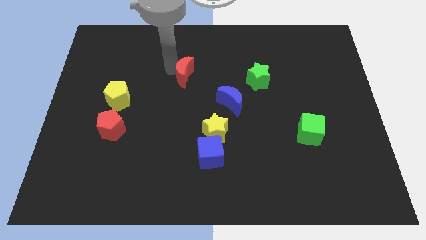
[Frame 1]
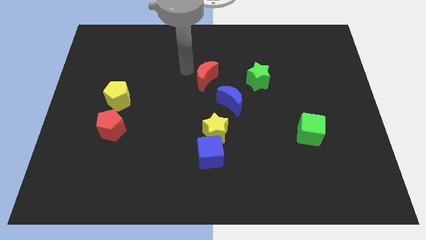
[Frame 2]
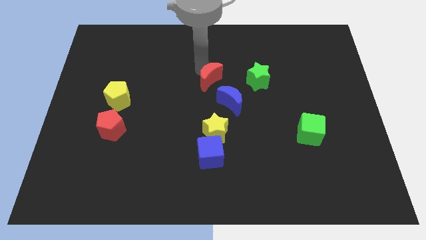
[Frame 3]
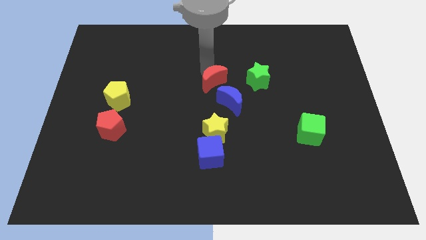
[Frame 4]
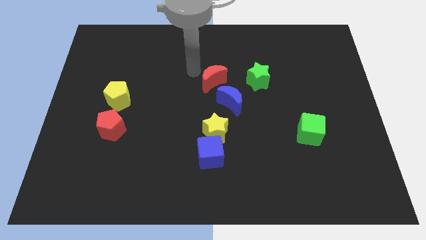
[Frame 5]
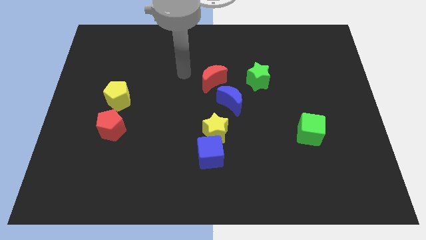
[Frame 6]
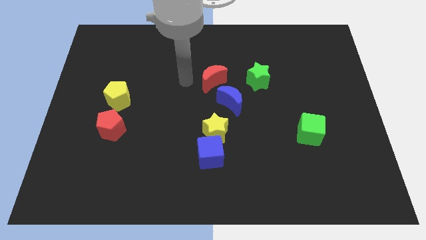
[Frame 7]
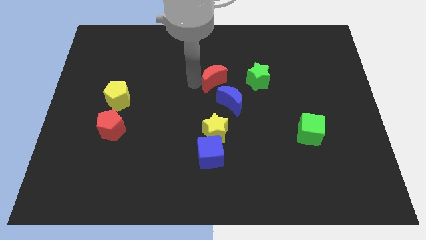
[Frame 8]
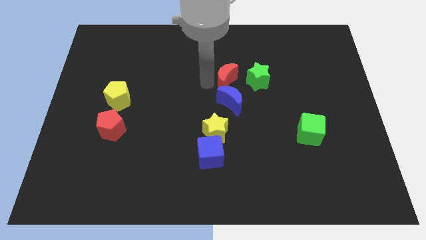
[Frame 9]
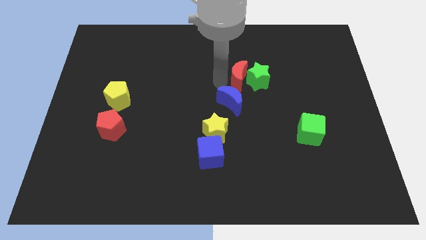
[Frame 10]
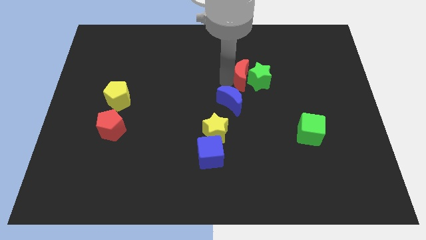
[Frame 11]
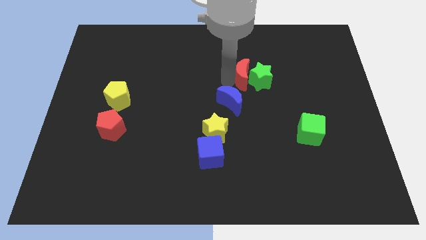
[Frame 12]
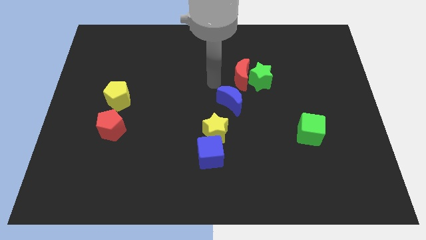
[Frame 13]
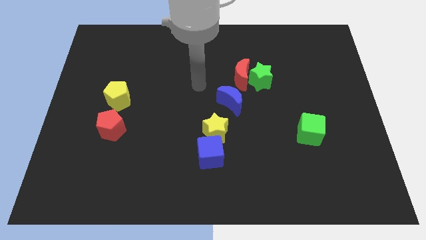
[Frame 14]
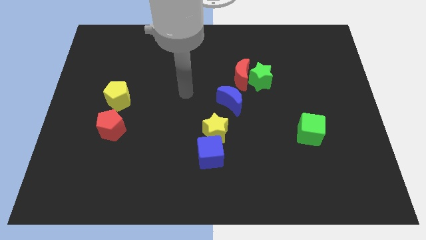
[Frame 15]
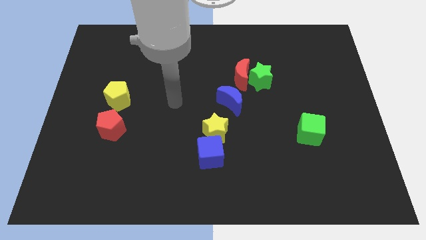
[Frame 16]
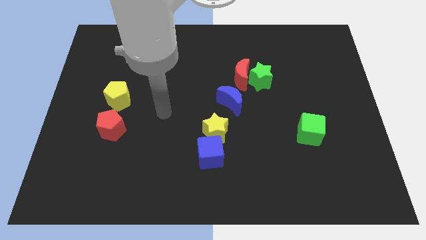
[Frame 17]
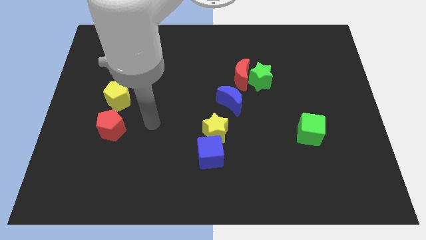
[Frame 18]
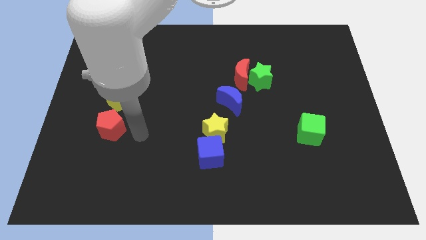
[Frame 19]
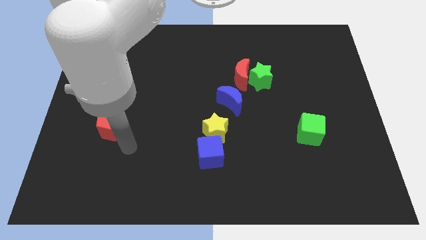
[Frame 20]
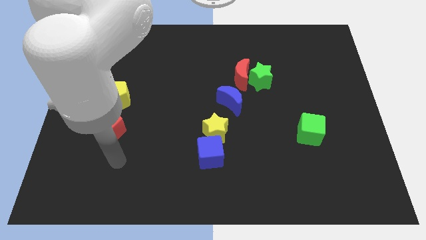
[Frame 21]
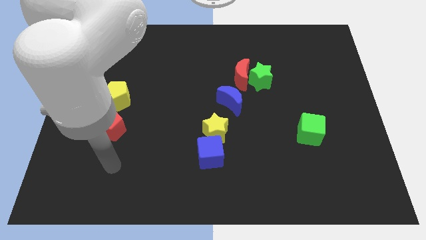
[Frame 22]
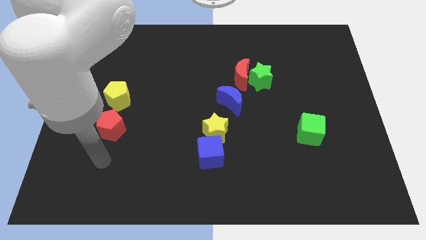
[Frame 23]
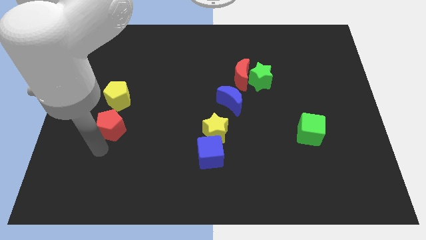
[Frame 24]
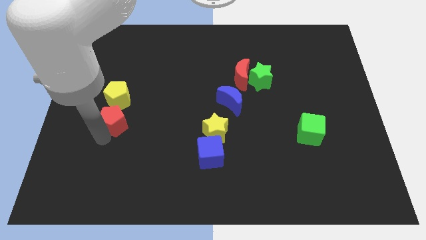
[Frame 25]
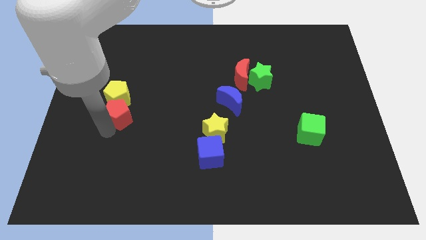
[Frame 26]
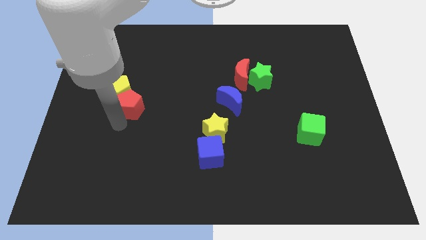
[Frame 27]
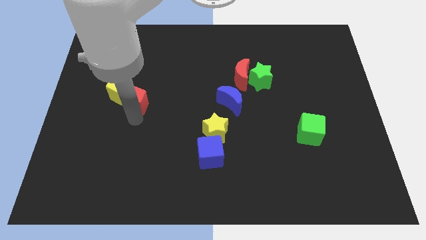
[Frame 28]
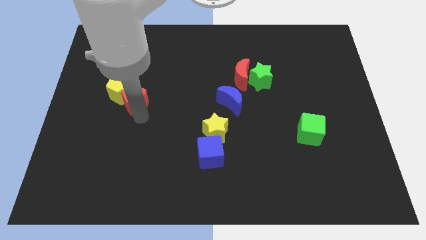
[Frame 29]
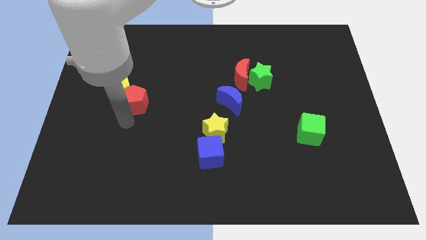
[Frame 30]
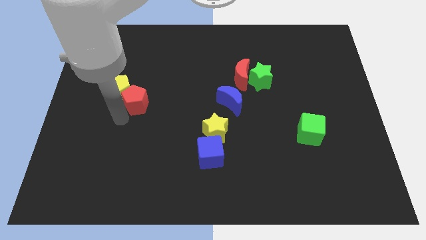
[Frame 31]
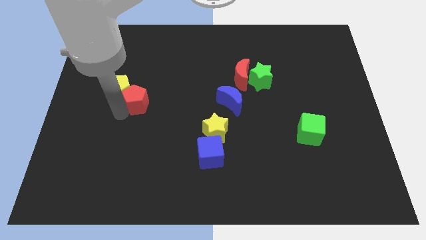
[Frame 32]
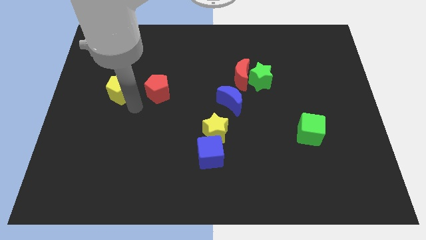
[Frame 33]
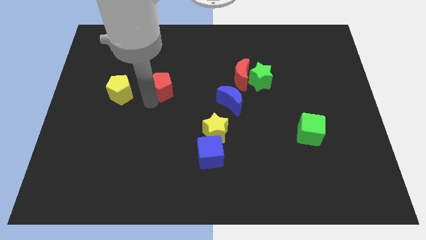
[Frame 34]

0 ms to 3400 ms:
push red pentagon beside yellow pentagon

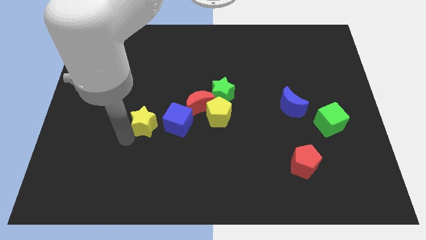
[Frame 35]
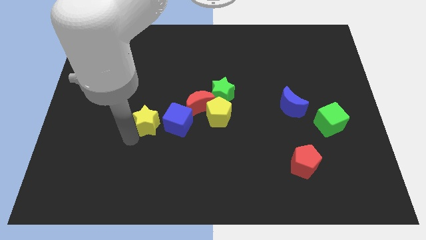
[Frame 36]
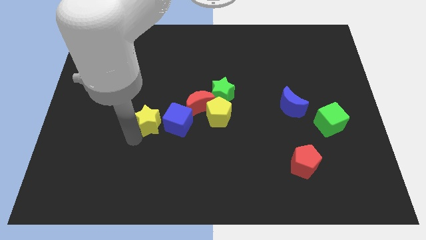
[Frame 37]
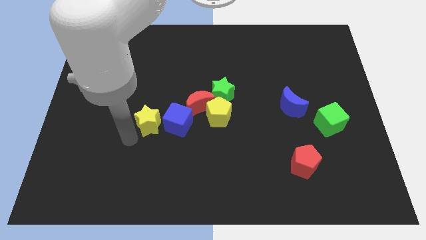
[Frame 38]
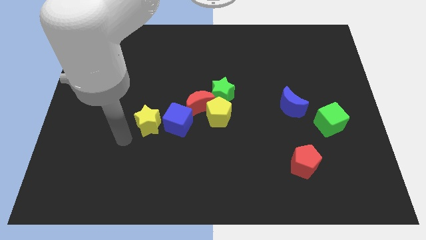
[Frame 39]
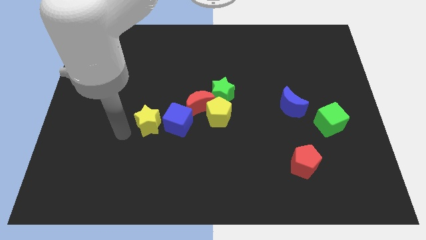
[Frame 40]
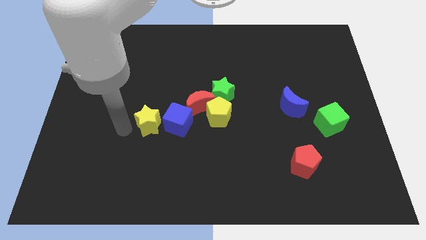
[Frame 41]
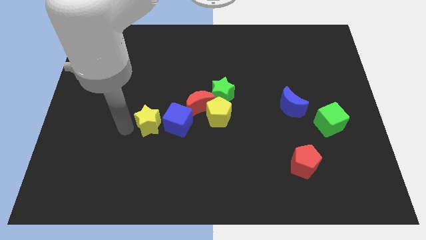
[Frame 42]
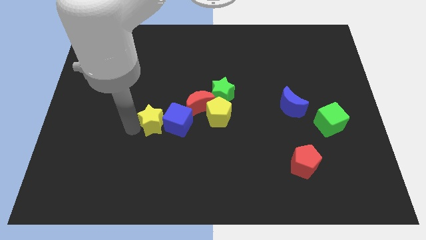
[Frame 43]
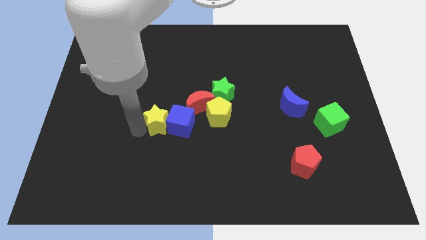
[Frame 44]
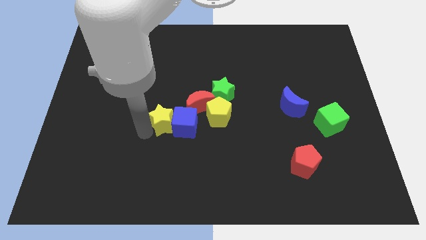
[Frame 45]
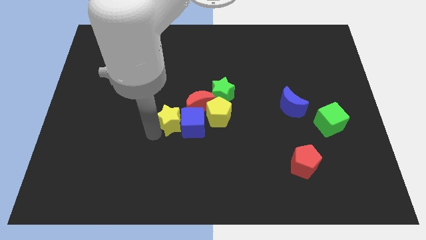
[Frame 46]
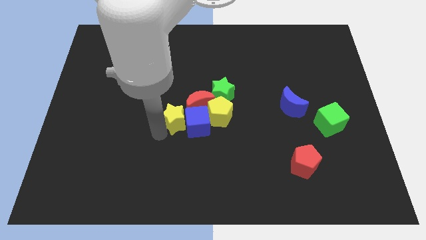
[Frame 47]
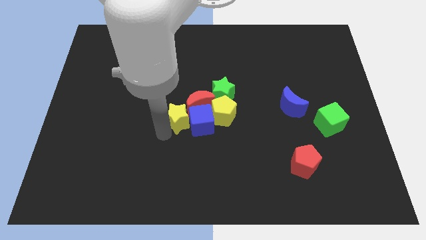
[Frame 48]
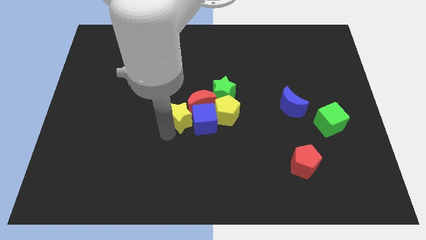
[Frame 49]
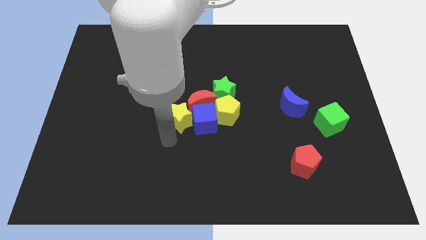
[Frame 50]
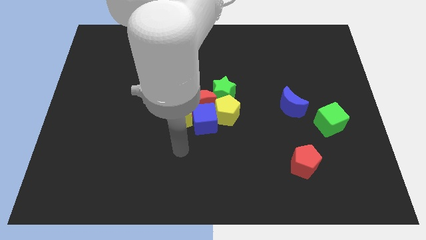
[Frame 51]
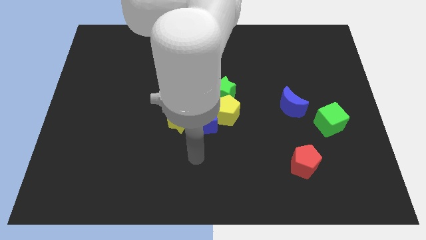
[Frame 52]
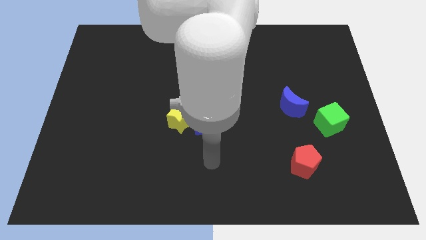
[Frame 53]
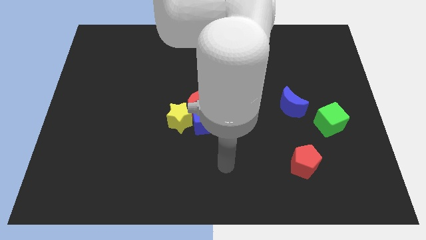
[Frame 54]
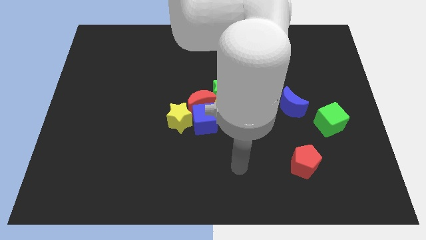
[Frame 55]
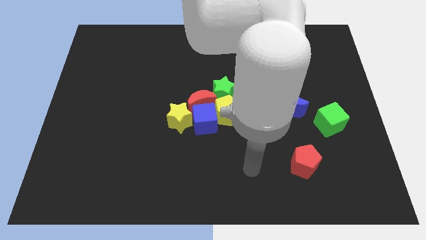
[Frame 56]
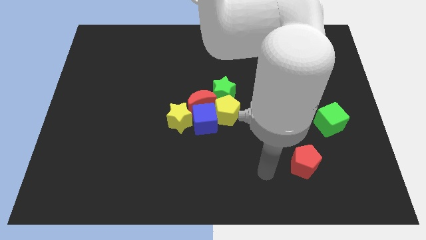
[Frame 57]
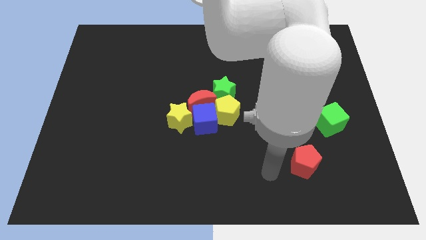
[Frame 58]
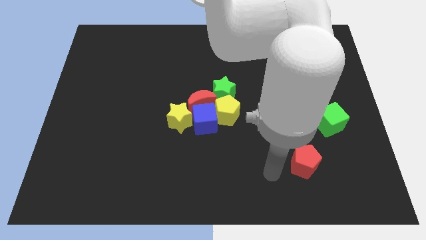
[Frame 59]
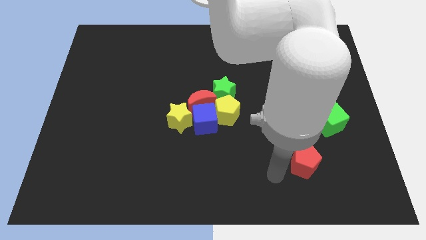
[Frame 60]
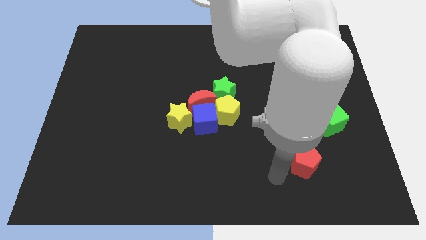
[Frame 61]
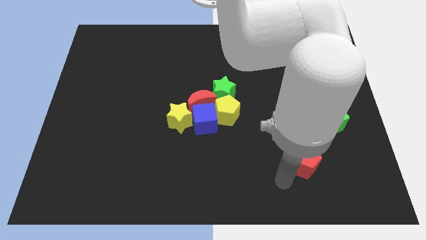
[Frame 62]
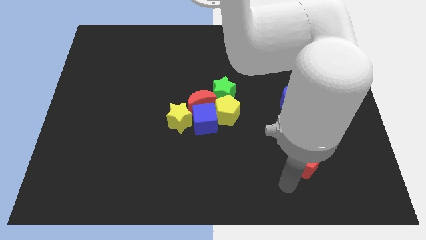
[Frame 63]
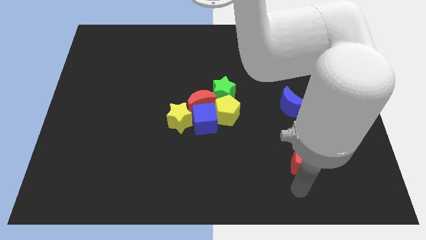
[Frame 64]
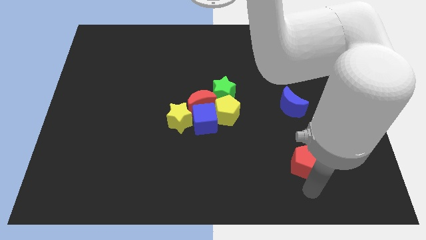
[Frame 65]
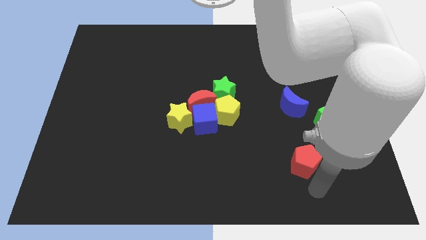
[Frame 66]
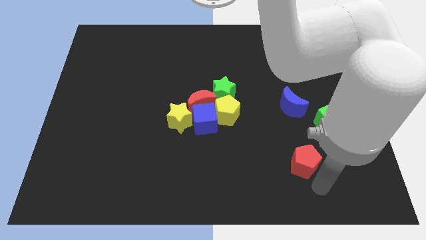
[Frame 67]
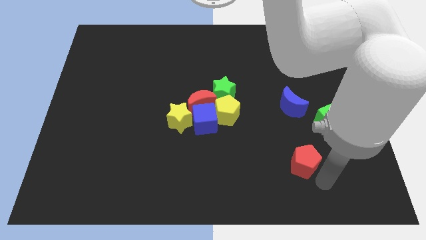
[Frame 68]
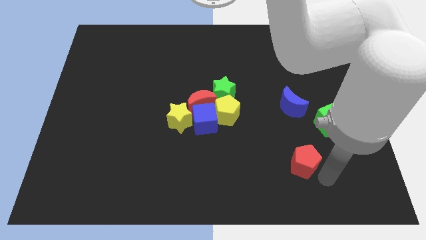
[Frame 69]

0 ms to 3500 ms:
add the yellow star to the group of blocks at the center of the board

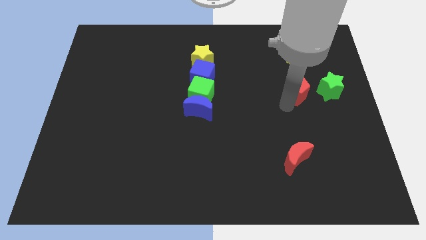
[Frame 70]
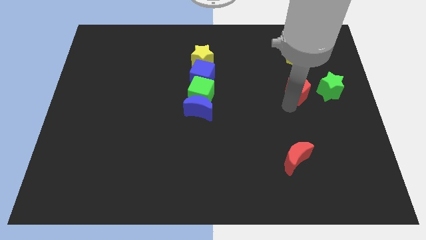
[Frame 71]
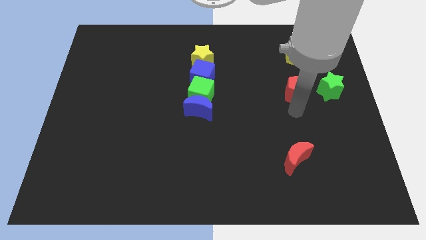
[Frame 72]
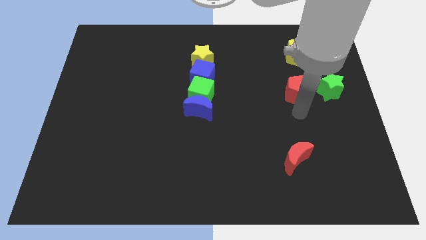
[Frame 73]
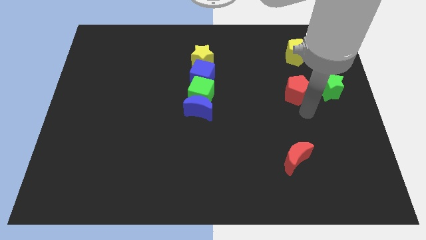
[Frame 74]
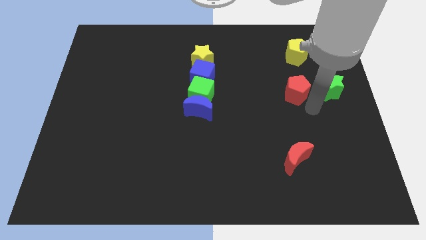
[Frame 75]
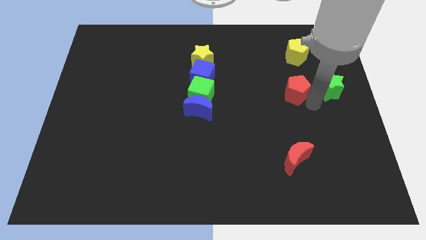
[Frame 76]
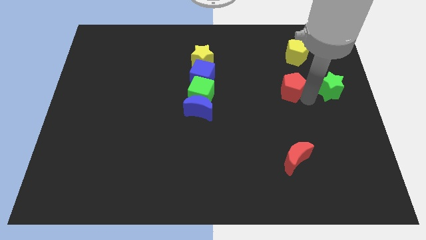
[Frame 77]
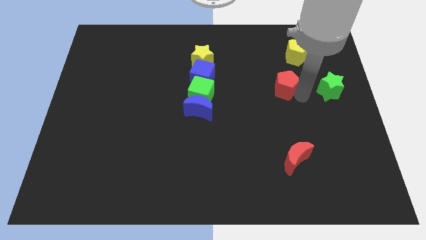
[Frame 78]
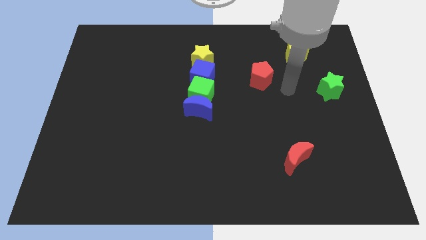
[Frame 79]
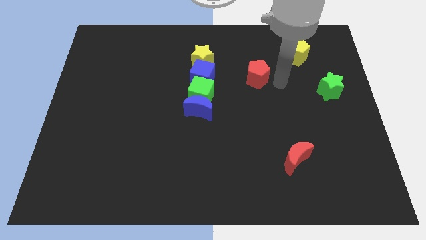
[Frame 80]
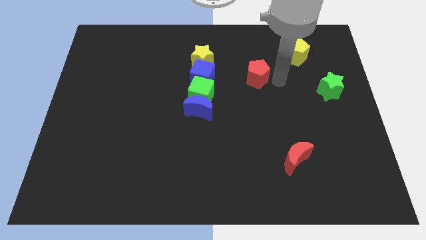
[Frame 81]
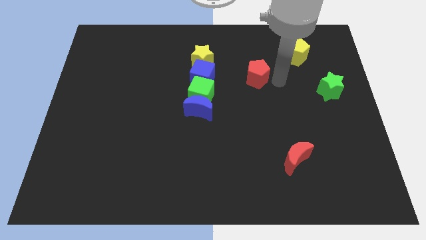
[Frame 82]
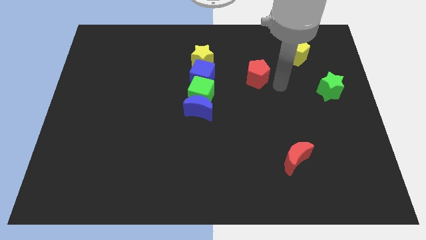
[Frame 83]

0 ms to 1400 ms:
move red pentagon away from the green star

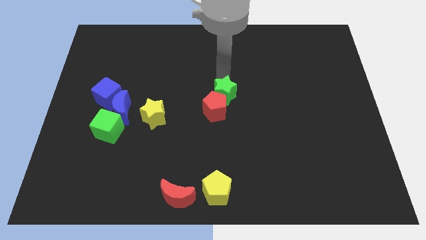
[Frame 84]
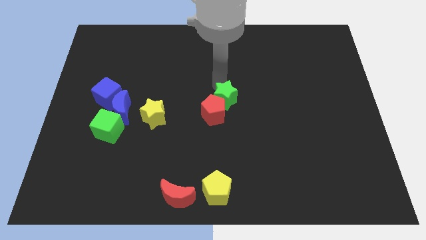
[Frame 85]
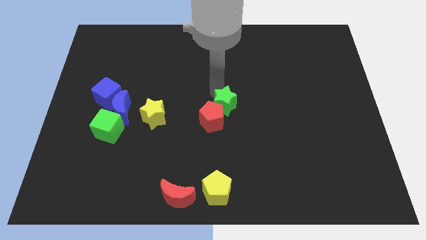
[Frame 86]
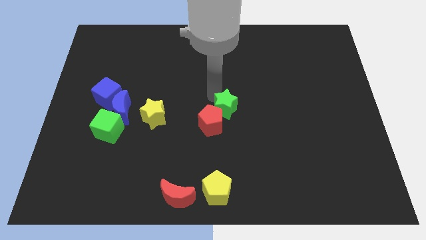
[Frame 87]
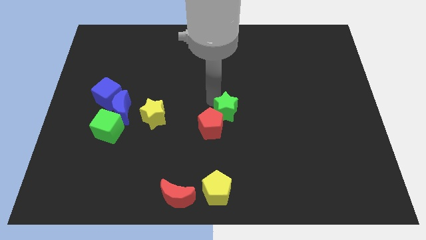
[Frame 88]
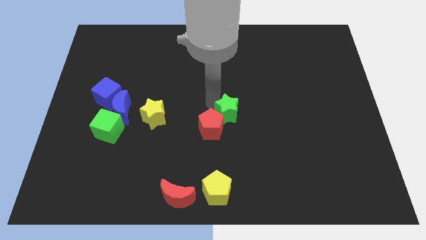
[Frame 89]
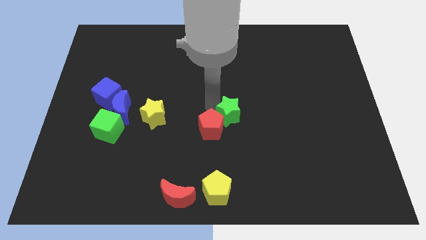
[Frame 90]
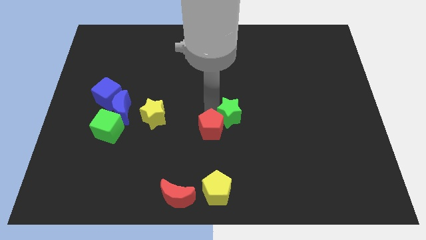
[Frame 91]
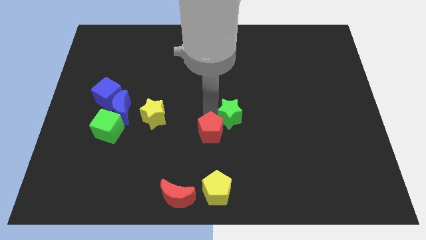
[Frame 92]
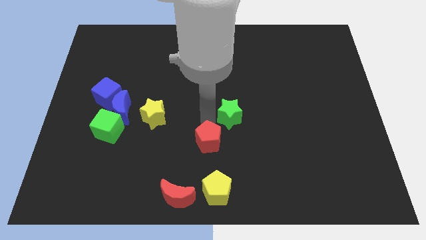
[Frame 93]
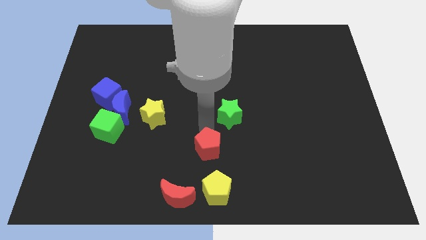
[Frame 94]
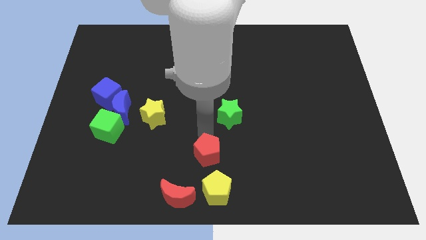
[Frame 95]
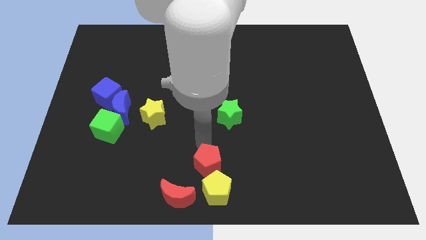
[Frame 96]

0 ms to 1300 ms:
separate the red pentagon from the green star
